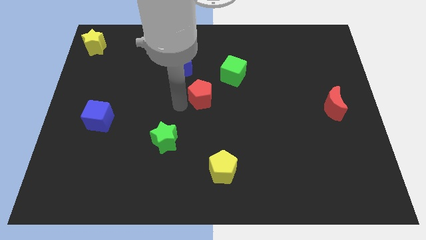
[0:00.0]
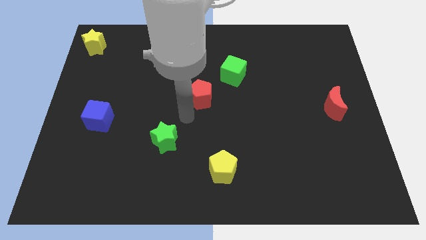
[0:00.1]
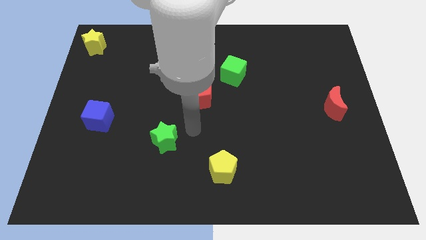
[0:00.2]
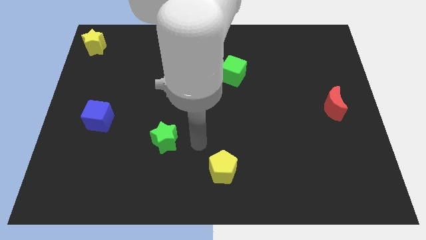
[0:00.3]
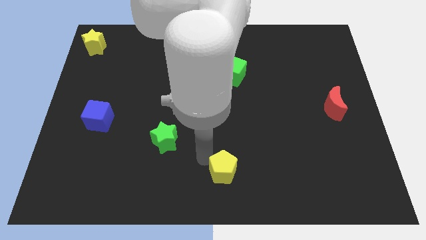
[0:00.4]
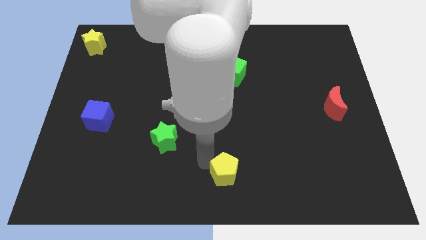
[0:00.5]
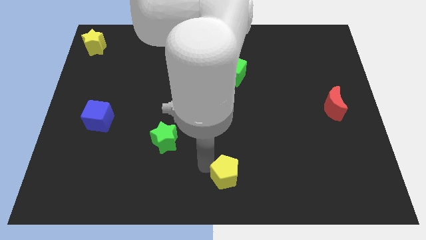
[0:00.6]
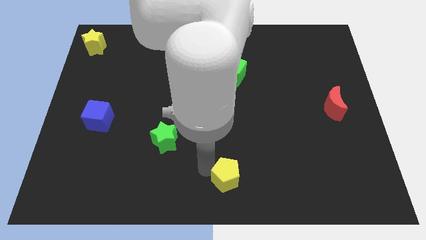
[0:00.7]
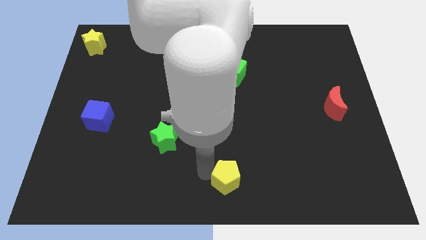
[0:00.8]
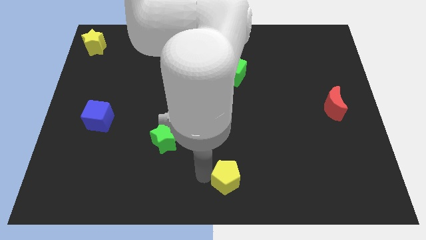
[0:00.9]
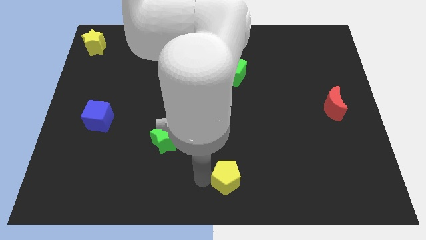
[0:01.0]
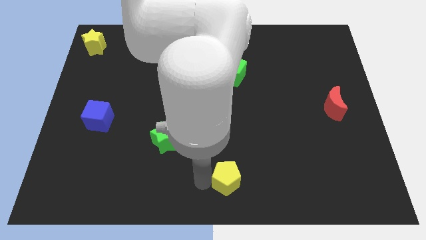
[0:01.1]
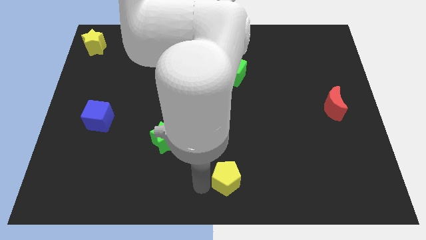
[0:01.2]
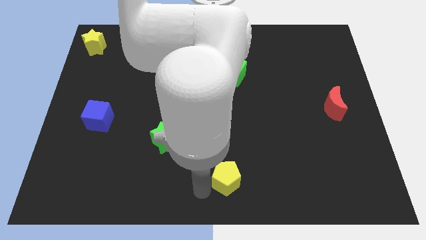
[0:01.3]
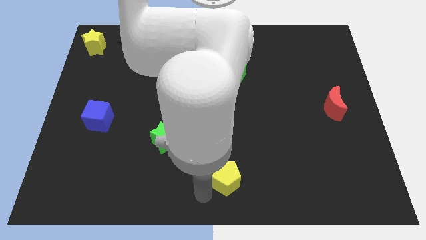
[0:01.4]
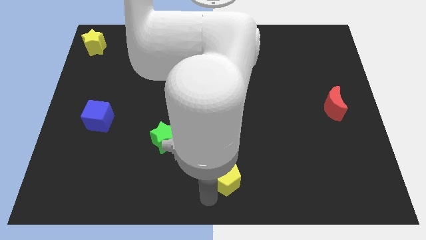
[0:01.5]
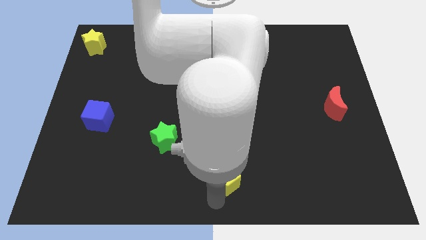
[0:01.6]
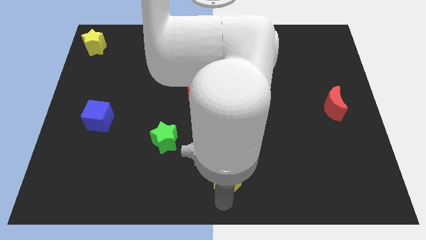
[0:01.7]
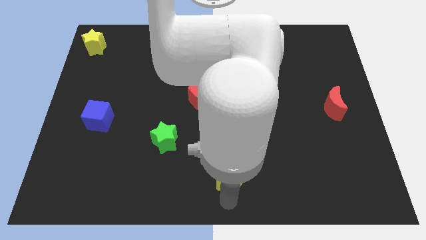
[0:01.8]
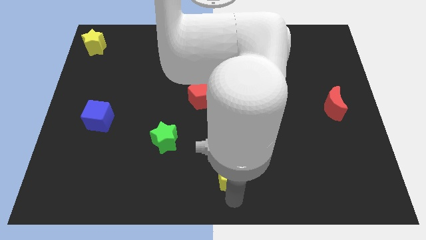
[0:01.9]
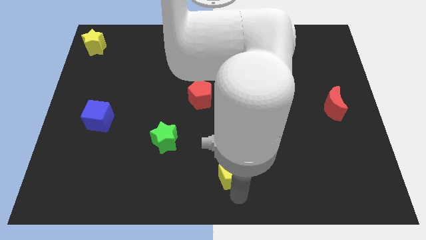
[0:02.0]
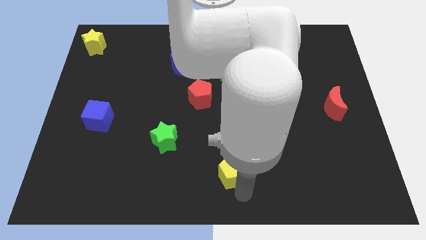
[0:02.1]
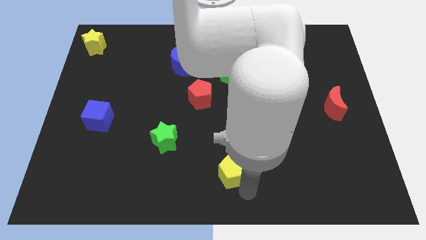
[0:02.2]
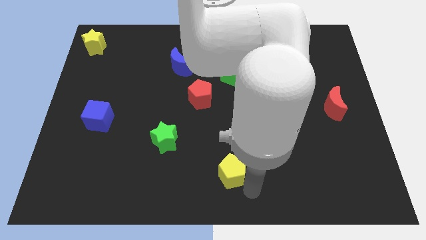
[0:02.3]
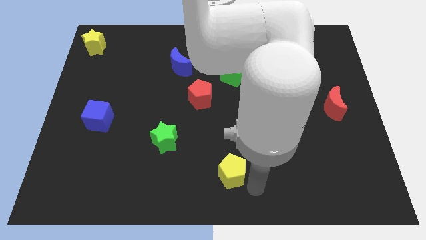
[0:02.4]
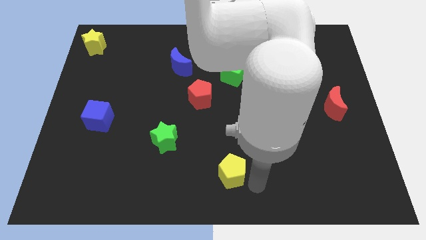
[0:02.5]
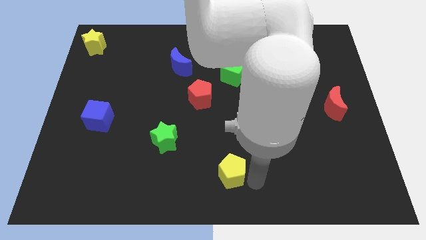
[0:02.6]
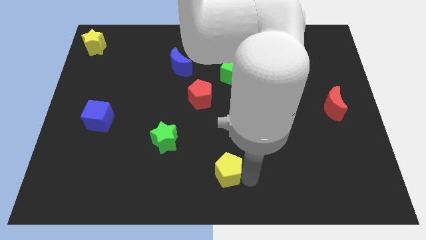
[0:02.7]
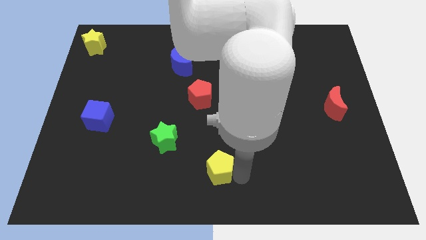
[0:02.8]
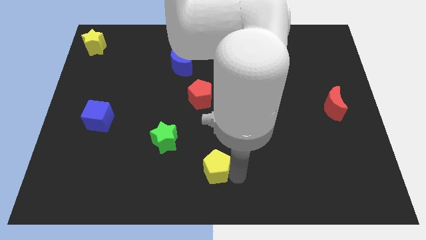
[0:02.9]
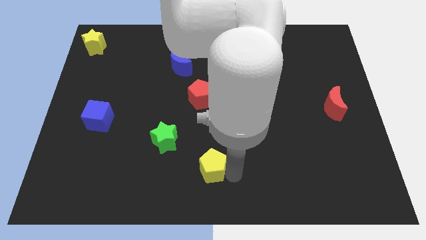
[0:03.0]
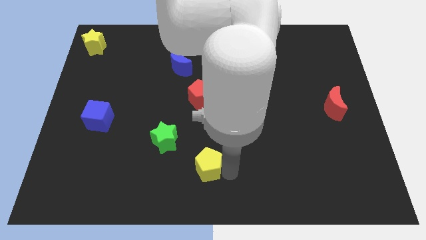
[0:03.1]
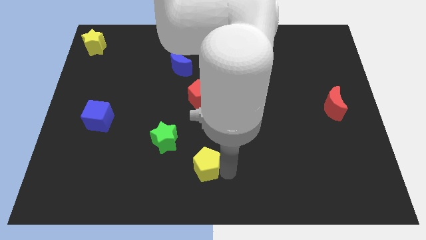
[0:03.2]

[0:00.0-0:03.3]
slide the yellow pentagon below the red pentagon

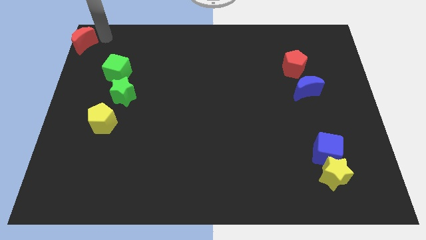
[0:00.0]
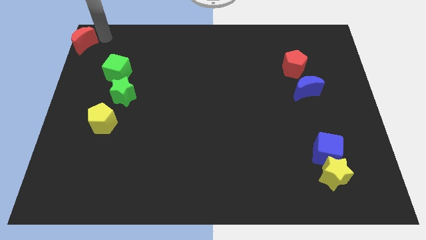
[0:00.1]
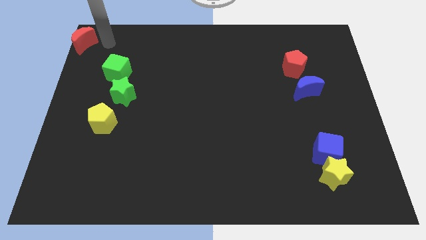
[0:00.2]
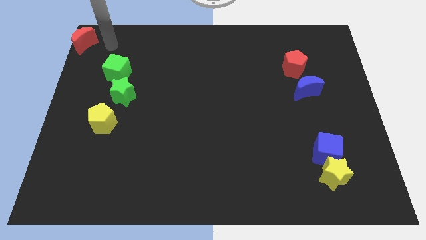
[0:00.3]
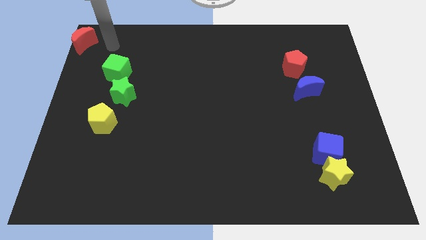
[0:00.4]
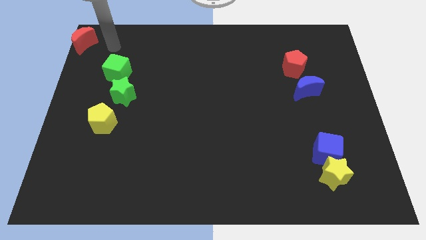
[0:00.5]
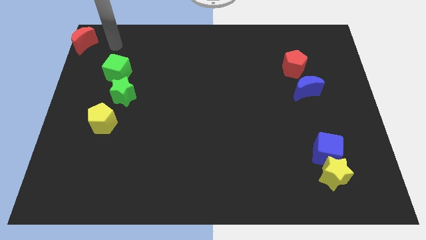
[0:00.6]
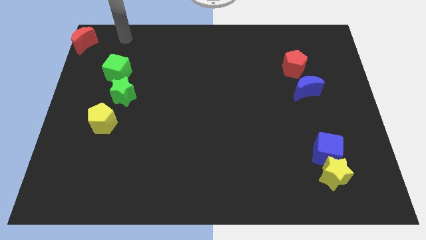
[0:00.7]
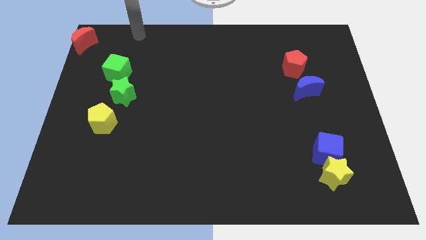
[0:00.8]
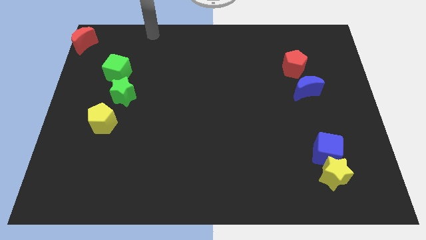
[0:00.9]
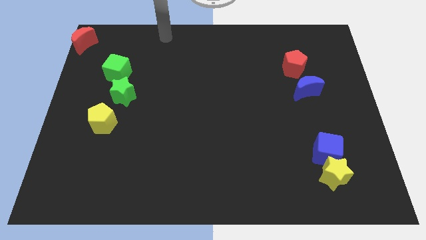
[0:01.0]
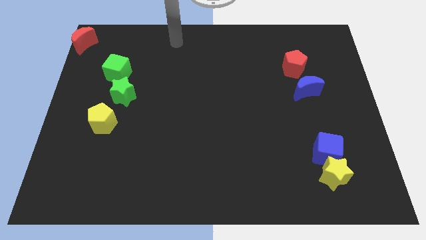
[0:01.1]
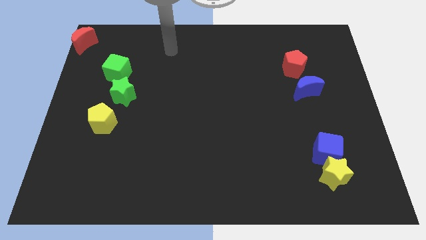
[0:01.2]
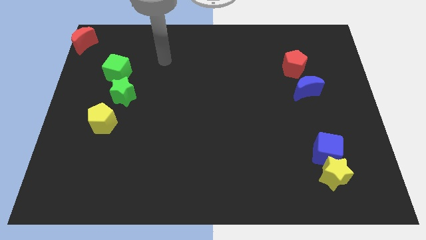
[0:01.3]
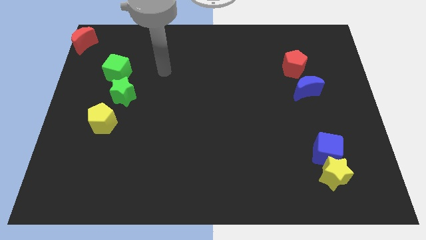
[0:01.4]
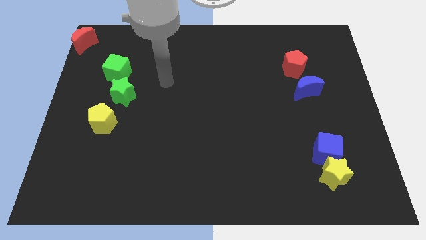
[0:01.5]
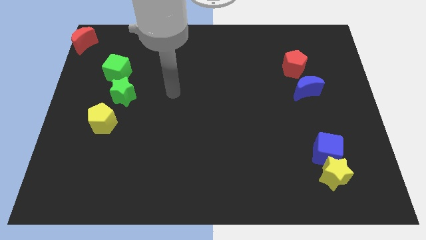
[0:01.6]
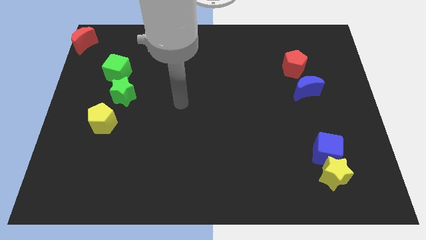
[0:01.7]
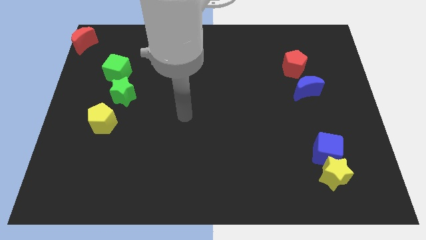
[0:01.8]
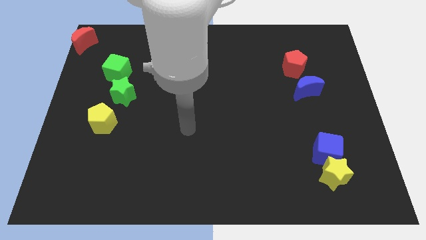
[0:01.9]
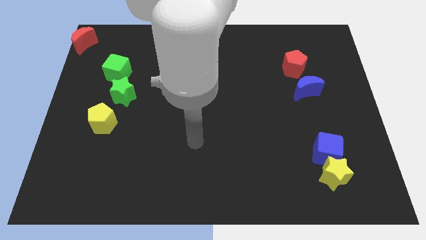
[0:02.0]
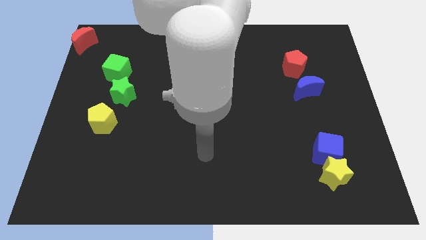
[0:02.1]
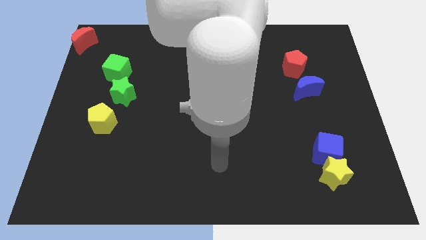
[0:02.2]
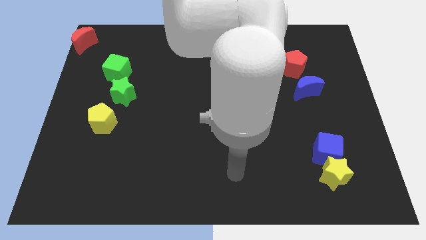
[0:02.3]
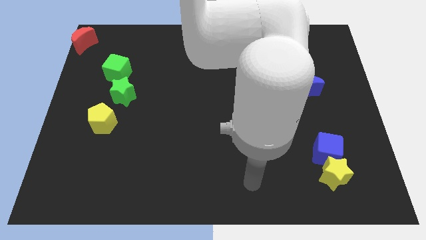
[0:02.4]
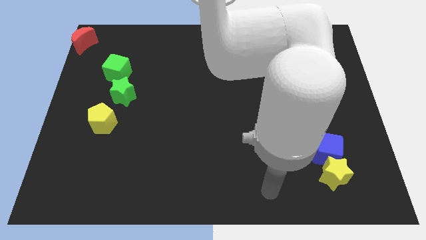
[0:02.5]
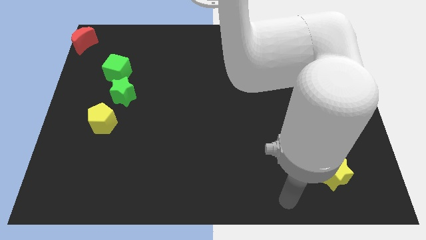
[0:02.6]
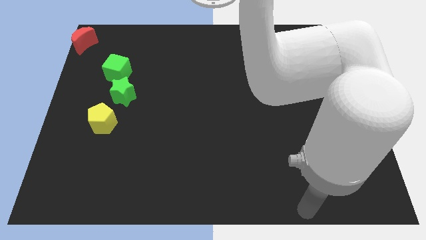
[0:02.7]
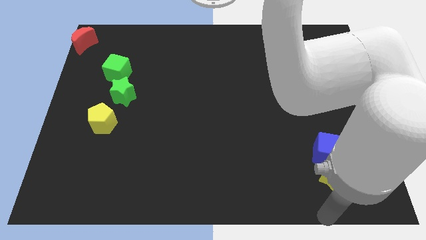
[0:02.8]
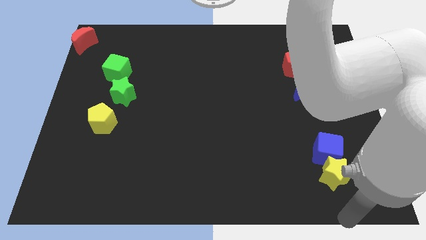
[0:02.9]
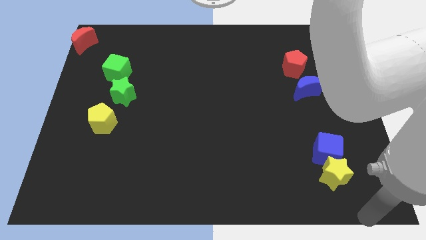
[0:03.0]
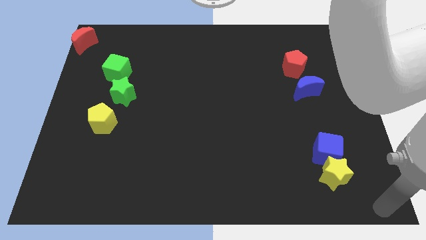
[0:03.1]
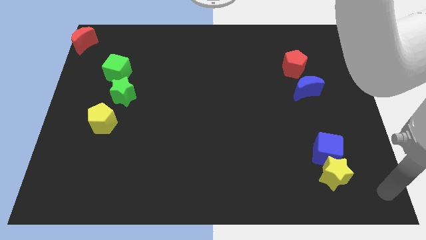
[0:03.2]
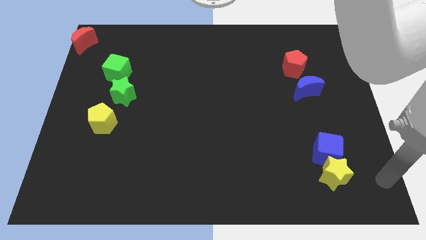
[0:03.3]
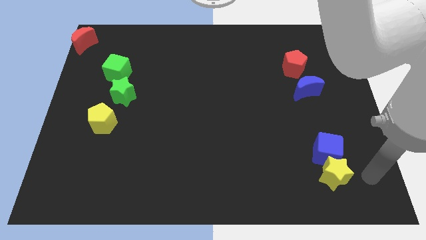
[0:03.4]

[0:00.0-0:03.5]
move your arm away from the red moon

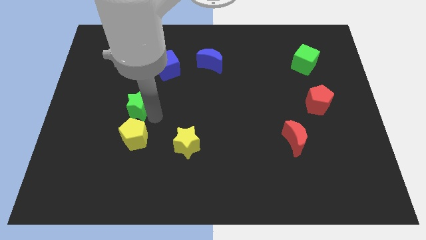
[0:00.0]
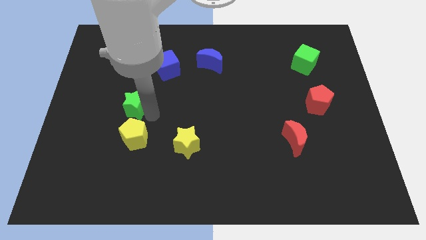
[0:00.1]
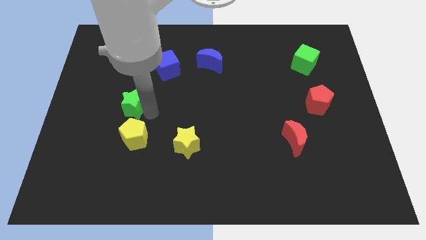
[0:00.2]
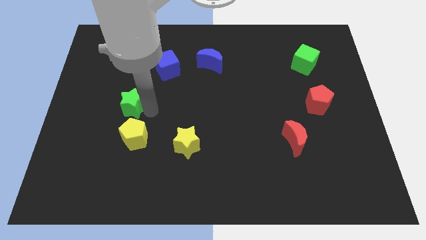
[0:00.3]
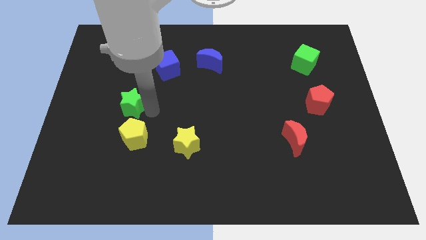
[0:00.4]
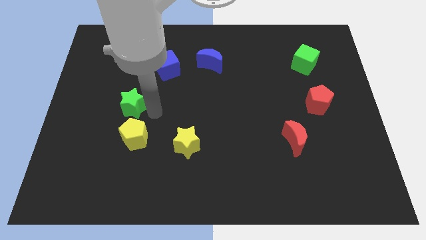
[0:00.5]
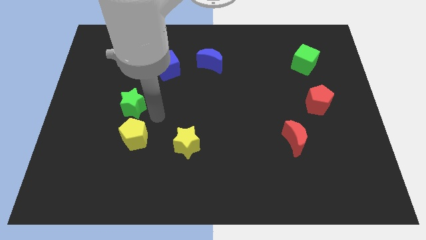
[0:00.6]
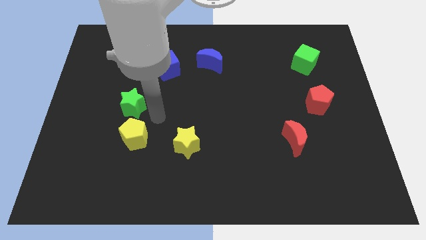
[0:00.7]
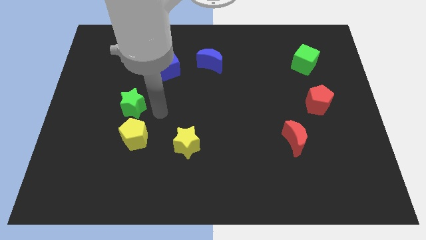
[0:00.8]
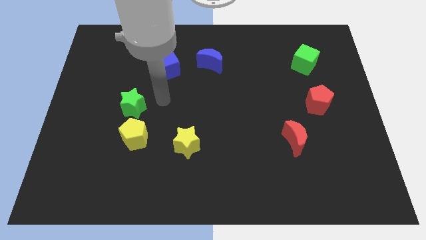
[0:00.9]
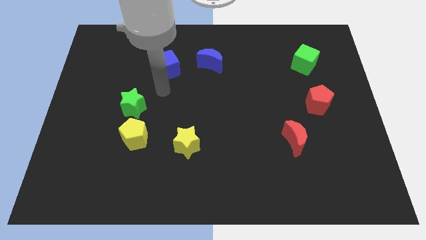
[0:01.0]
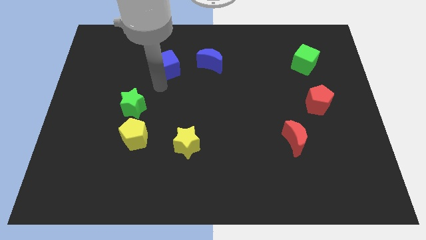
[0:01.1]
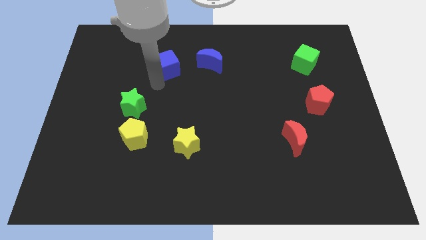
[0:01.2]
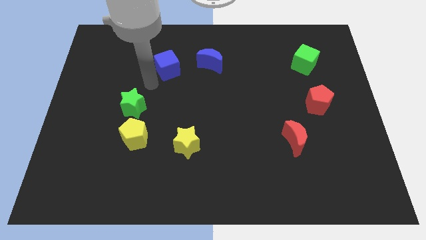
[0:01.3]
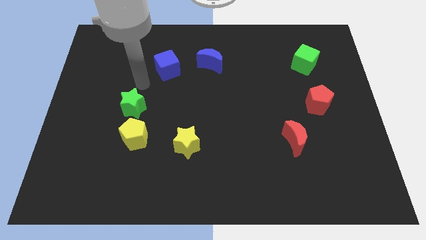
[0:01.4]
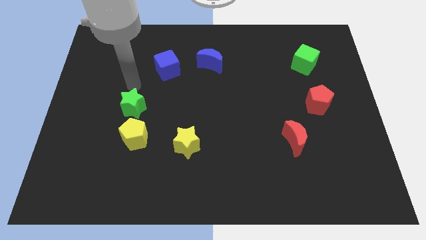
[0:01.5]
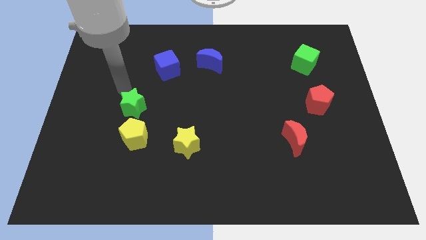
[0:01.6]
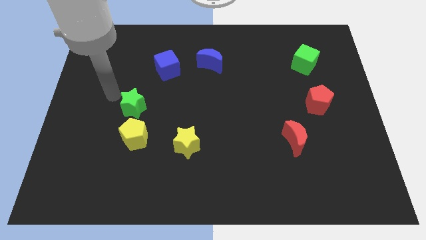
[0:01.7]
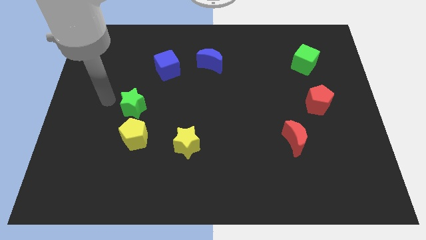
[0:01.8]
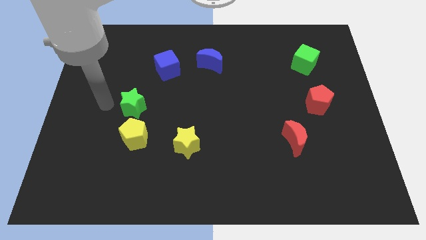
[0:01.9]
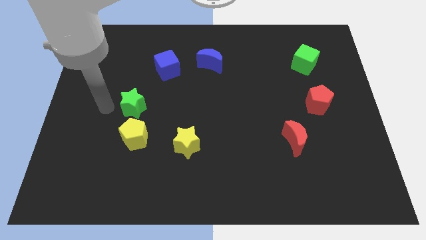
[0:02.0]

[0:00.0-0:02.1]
place your arm left to green star
